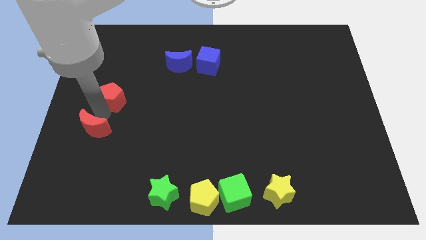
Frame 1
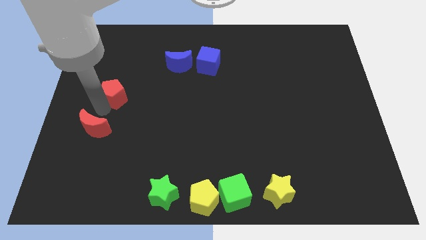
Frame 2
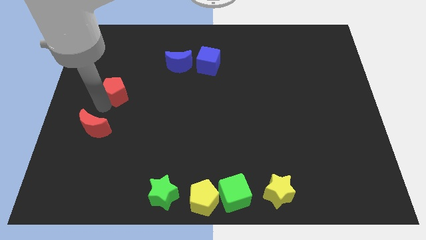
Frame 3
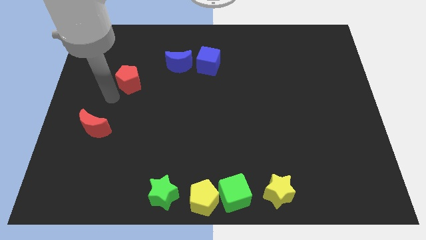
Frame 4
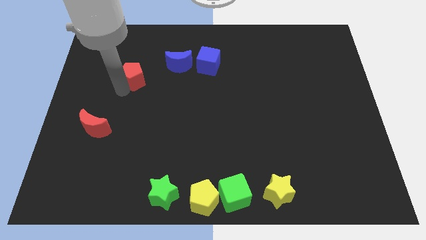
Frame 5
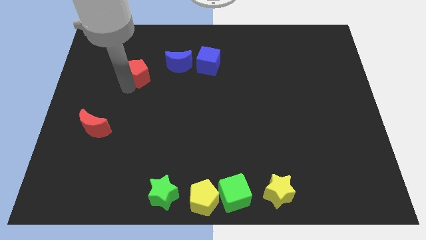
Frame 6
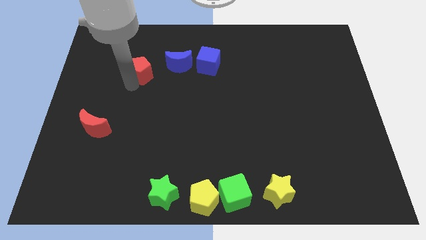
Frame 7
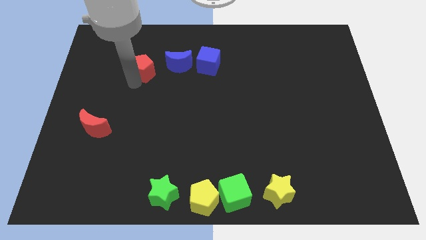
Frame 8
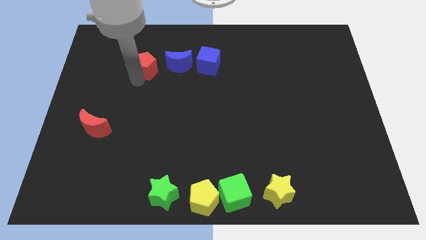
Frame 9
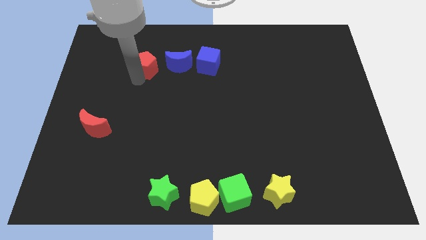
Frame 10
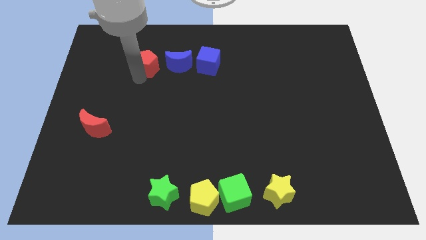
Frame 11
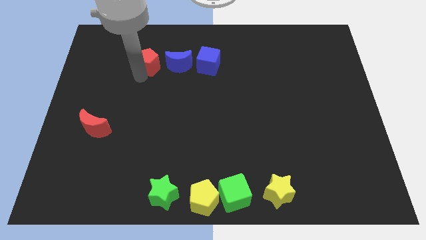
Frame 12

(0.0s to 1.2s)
move the red pentagon close to the blue crescent

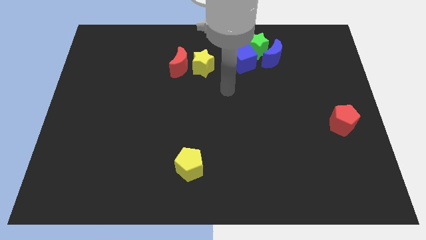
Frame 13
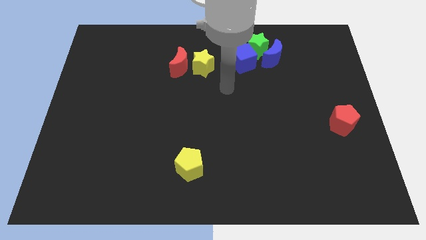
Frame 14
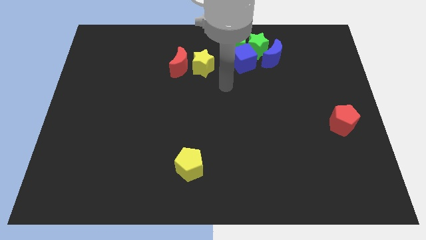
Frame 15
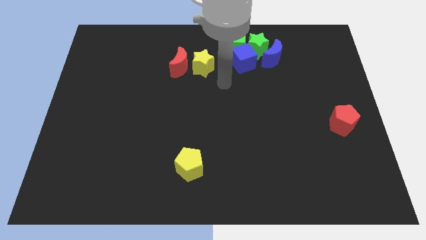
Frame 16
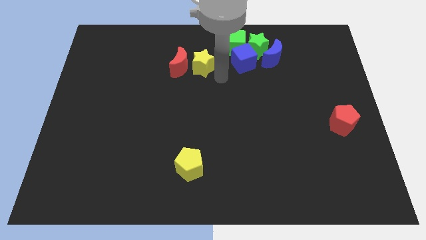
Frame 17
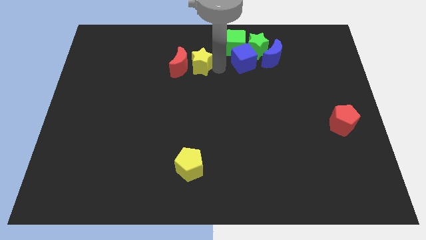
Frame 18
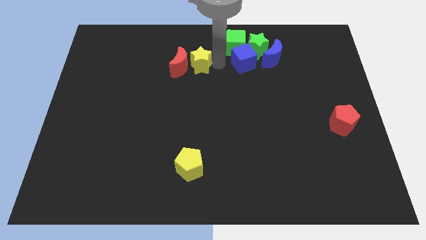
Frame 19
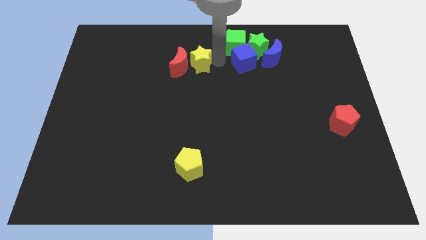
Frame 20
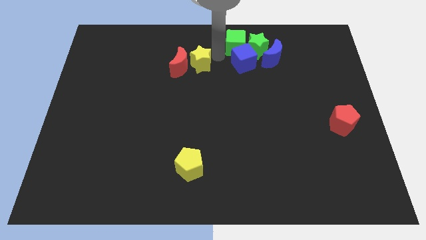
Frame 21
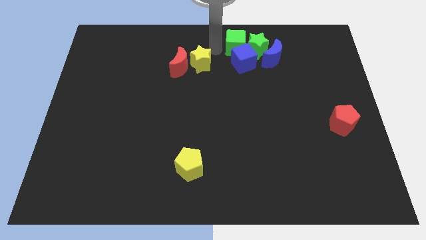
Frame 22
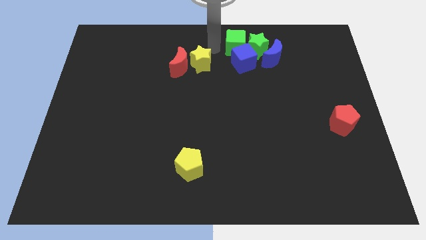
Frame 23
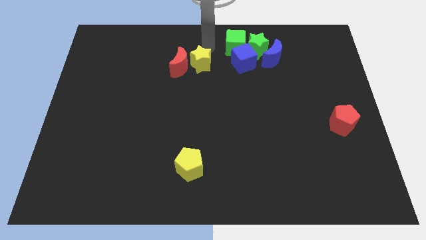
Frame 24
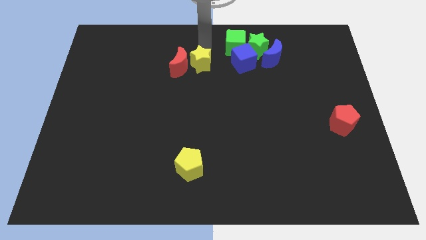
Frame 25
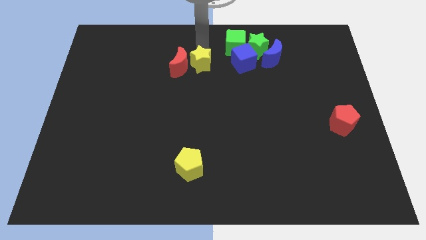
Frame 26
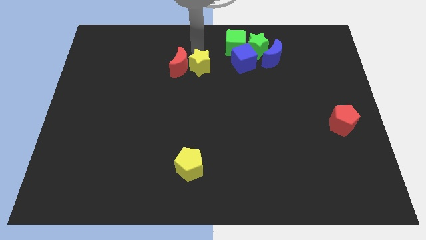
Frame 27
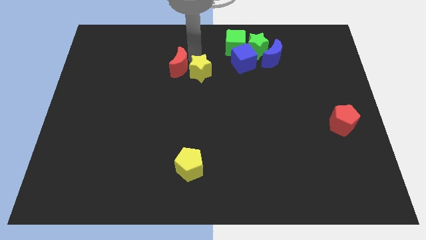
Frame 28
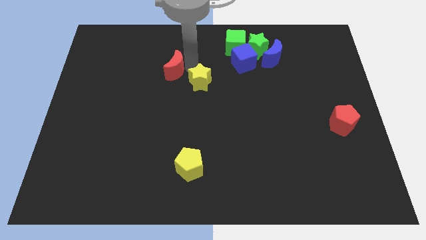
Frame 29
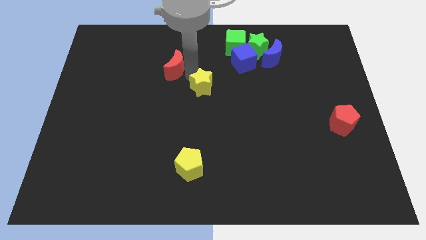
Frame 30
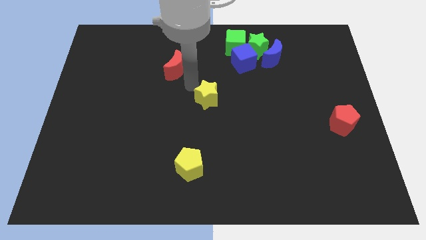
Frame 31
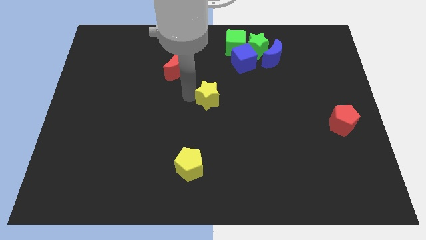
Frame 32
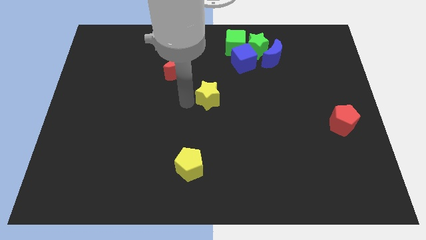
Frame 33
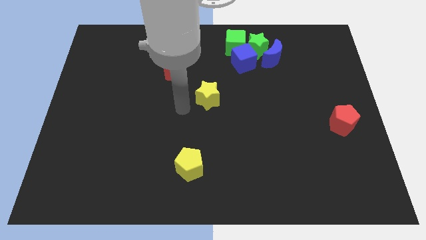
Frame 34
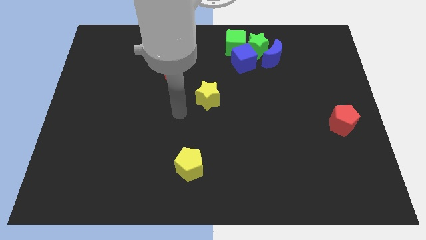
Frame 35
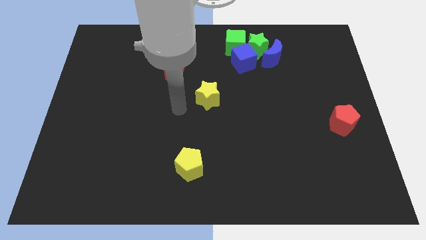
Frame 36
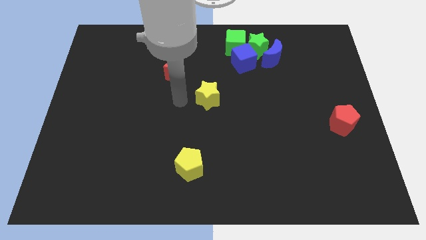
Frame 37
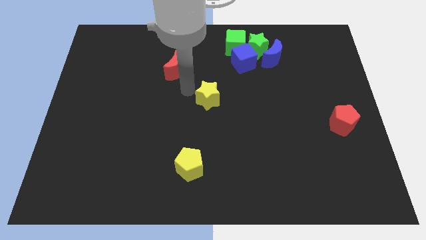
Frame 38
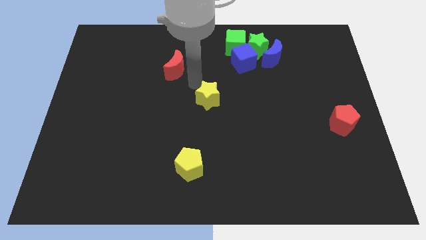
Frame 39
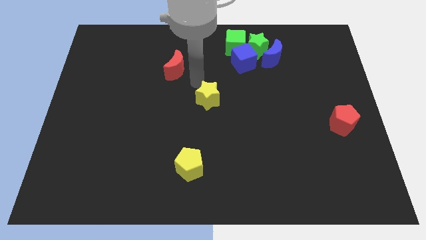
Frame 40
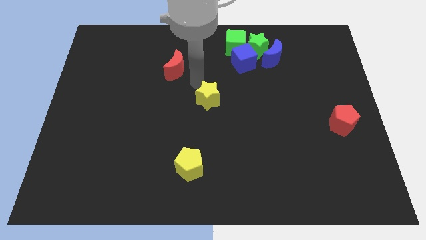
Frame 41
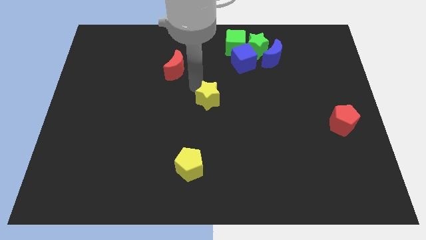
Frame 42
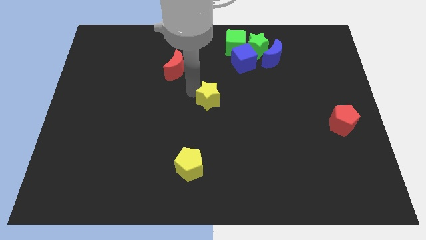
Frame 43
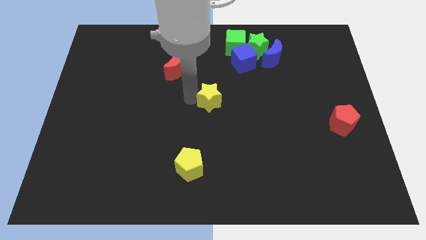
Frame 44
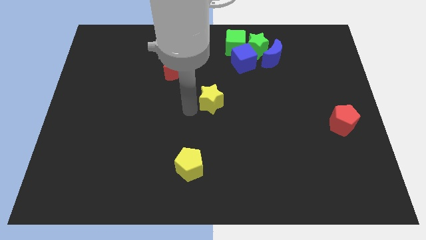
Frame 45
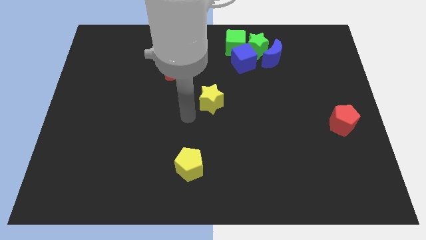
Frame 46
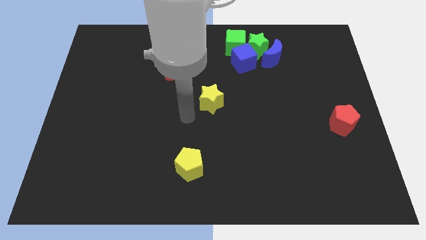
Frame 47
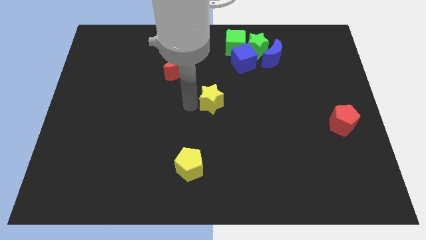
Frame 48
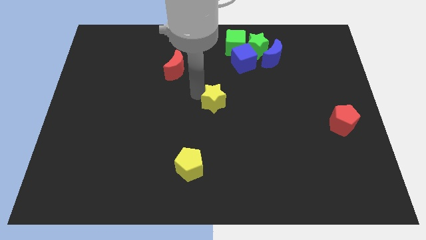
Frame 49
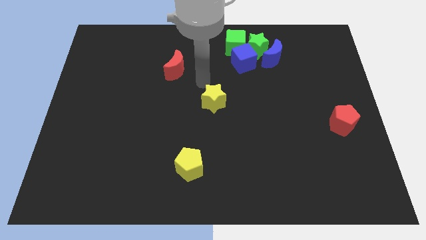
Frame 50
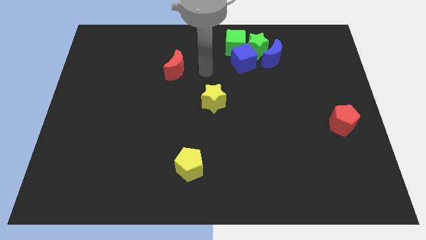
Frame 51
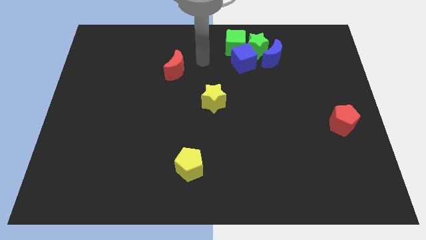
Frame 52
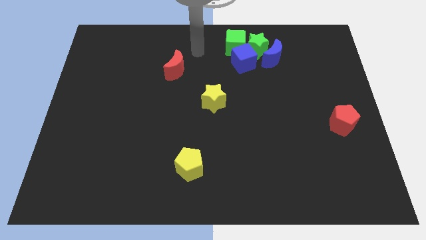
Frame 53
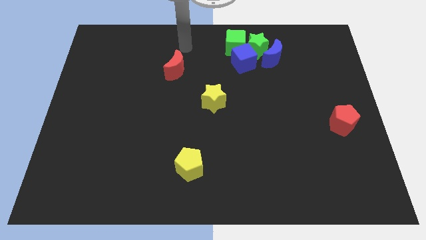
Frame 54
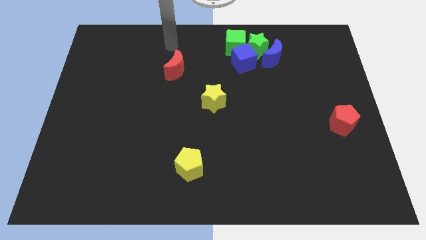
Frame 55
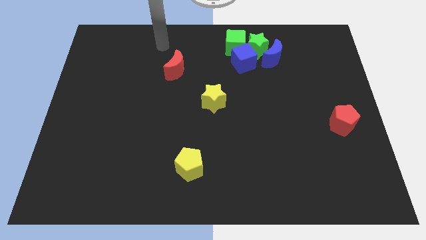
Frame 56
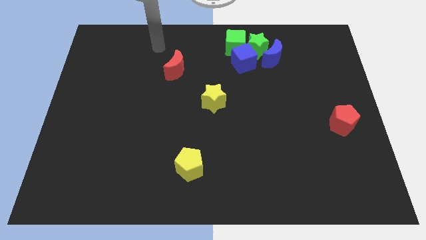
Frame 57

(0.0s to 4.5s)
place the yellow star at the center of the board

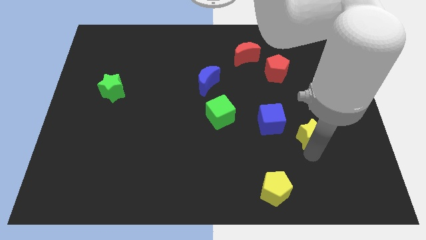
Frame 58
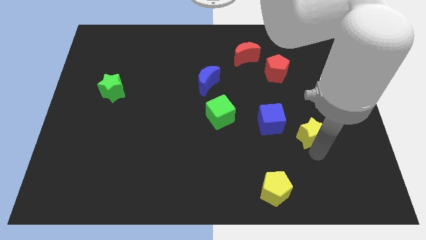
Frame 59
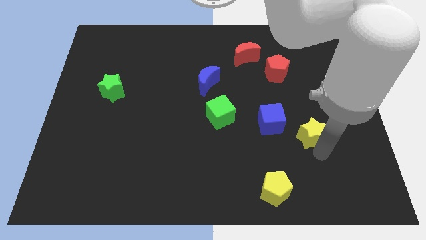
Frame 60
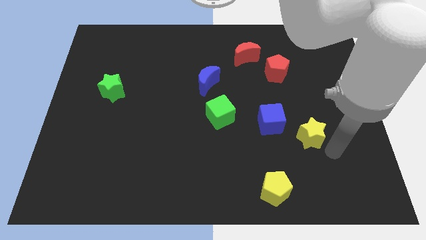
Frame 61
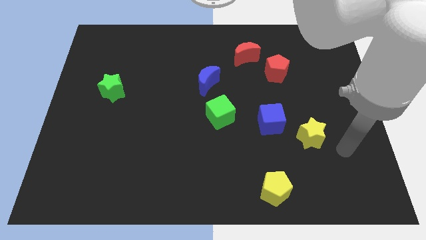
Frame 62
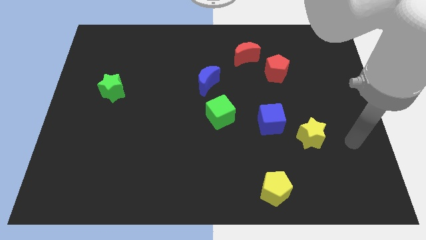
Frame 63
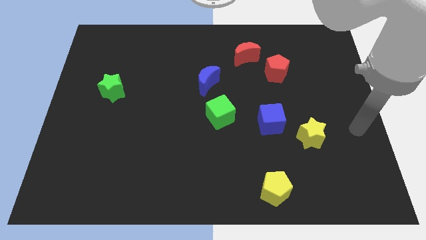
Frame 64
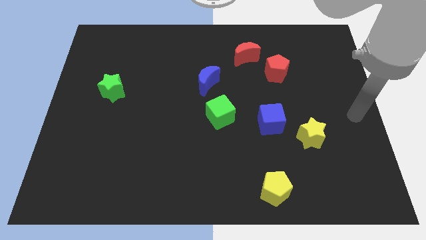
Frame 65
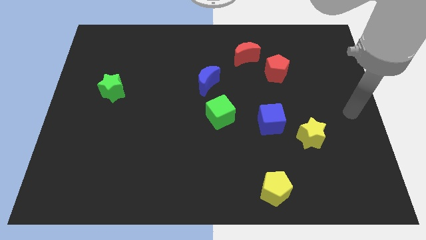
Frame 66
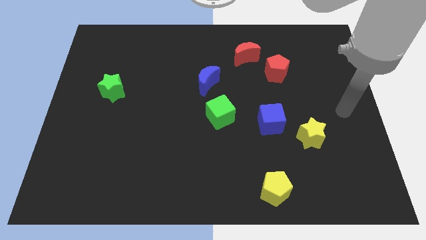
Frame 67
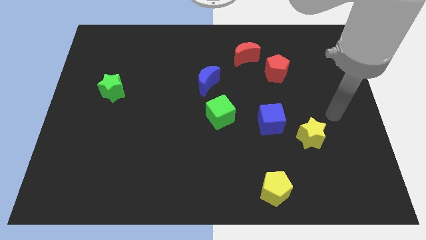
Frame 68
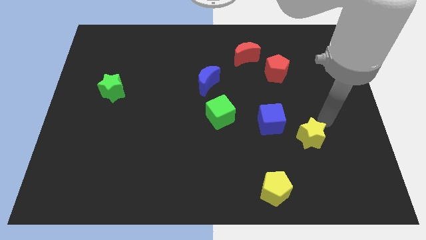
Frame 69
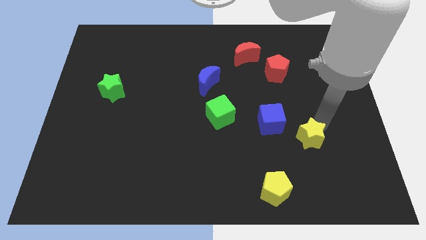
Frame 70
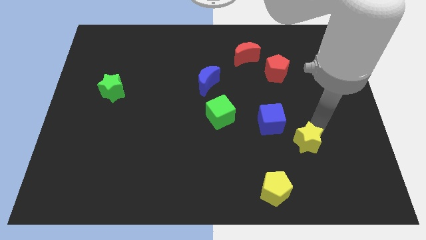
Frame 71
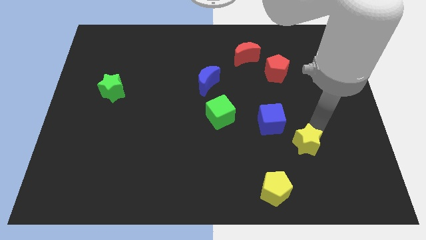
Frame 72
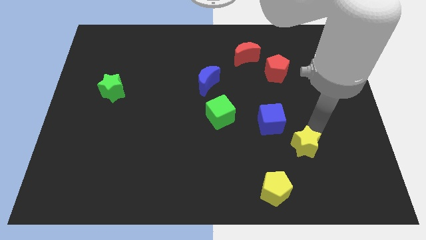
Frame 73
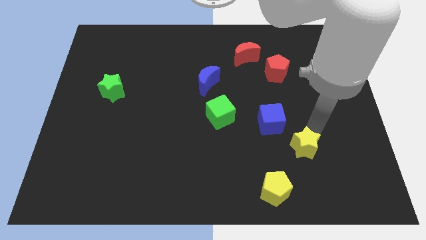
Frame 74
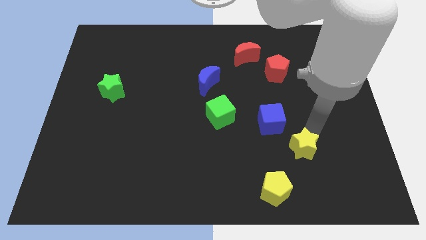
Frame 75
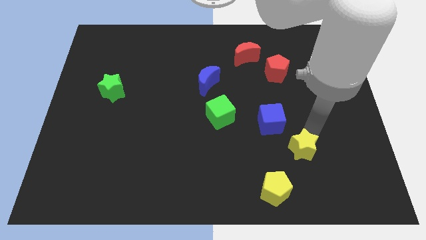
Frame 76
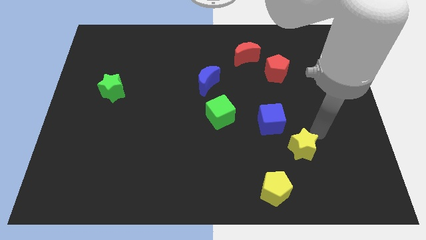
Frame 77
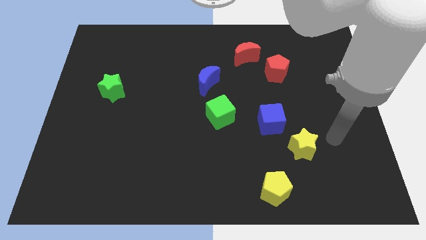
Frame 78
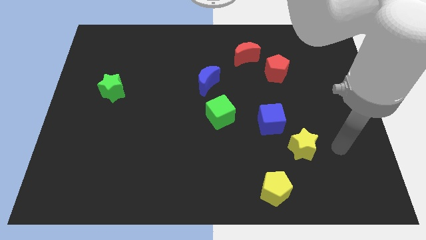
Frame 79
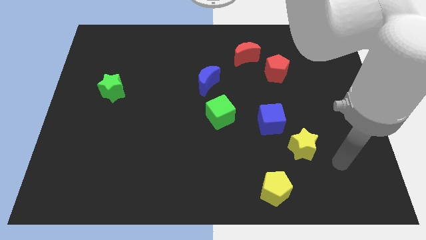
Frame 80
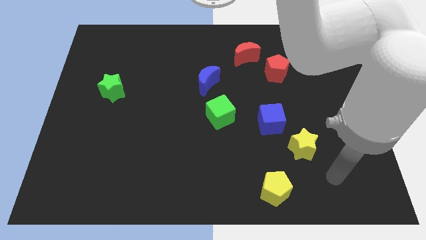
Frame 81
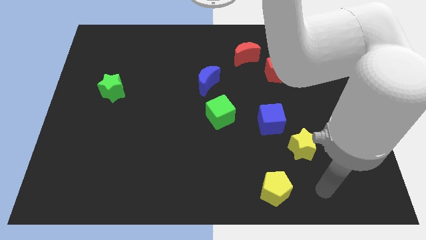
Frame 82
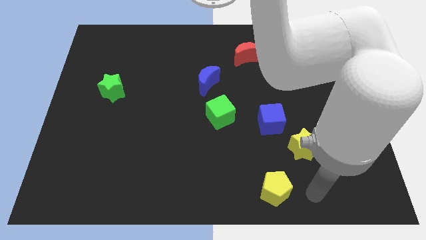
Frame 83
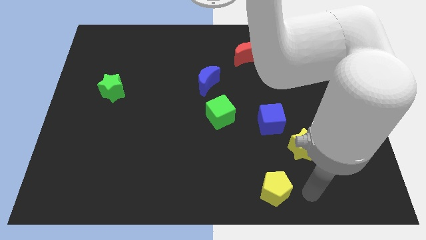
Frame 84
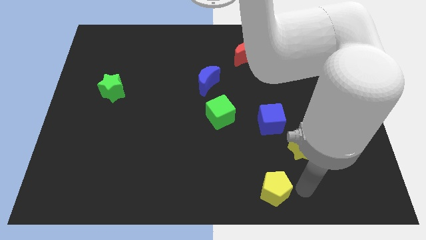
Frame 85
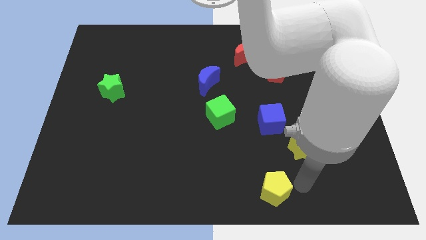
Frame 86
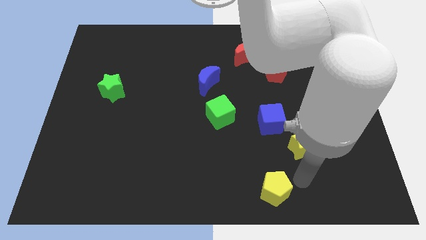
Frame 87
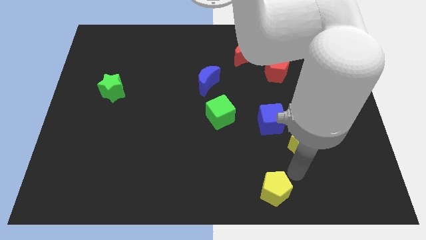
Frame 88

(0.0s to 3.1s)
place your hand in between yellow star and yellow pentagon

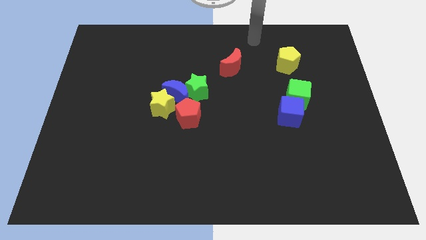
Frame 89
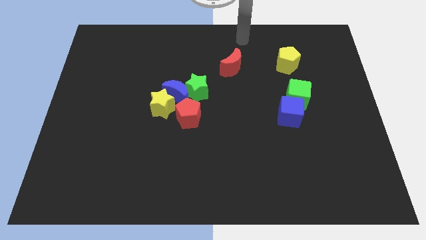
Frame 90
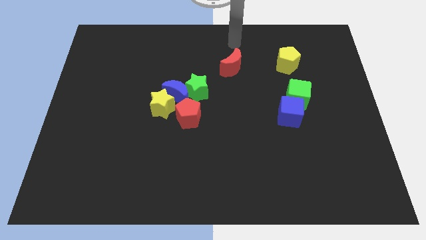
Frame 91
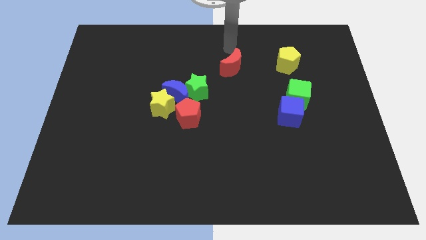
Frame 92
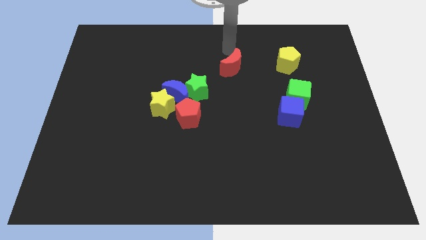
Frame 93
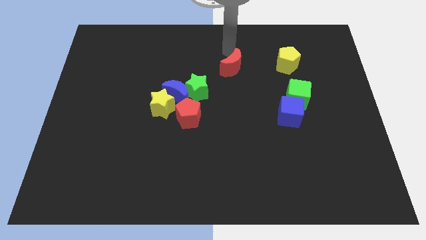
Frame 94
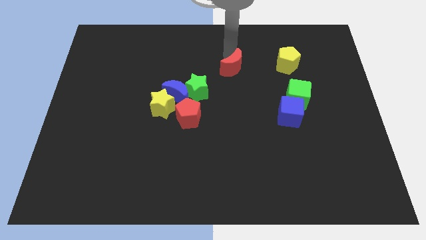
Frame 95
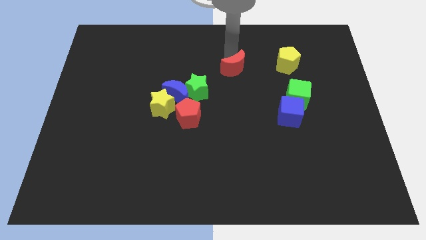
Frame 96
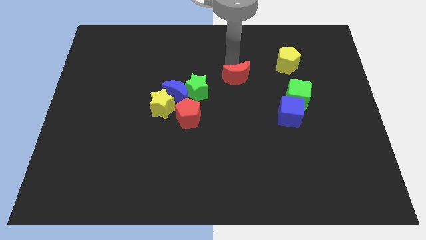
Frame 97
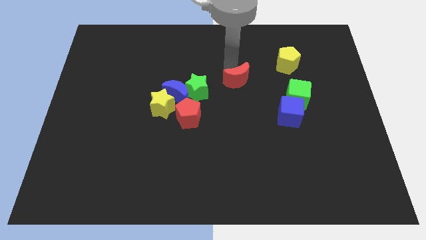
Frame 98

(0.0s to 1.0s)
push red crescent slightly downwards
